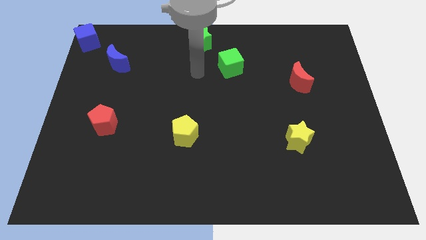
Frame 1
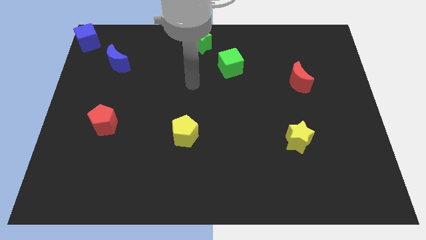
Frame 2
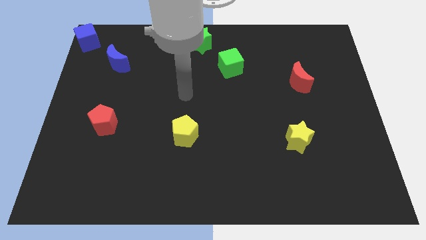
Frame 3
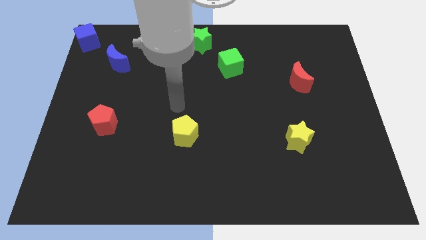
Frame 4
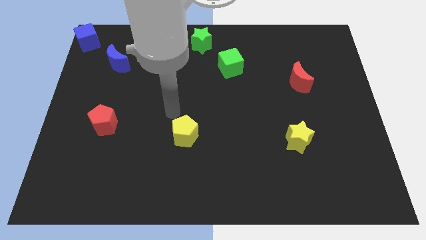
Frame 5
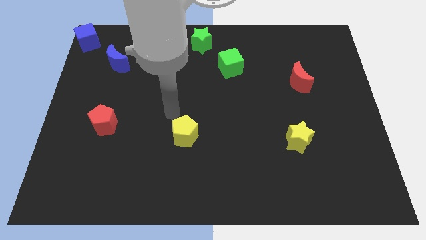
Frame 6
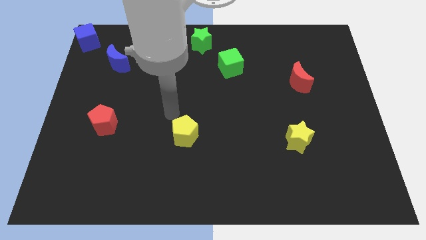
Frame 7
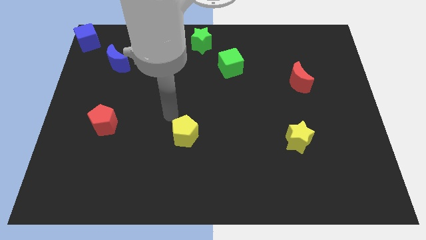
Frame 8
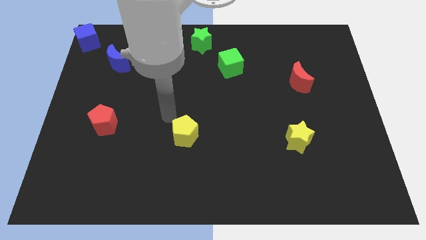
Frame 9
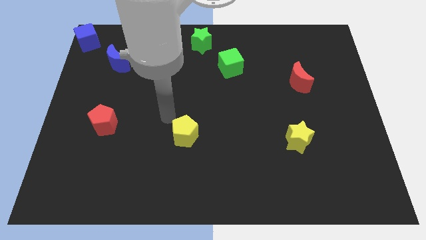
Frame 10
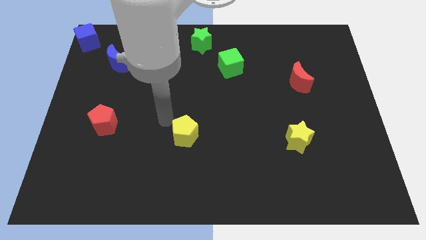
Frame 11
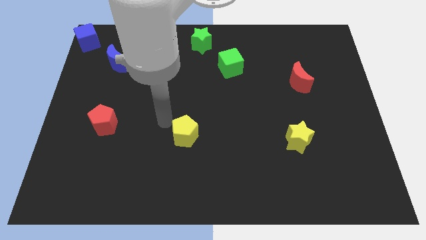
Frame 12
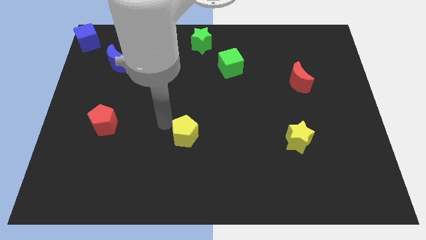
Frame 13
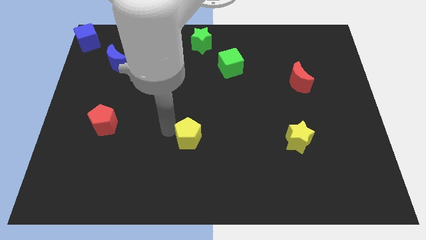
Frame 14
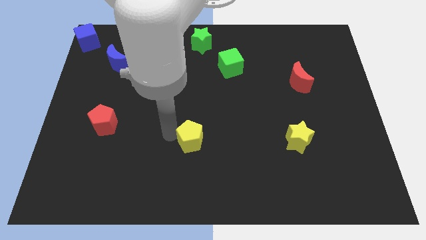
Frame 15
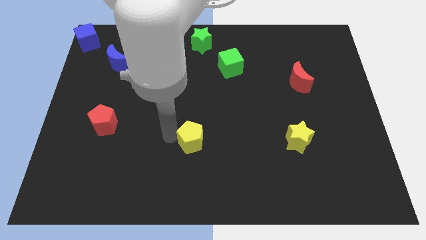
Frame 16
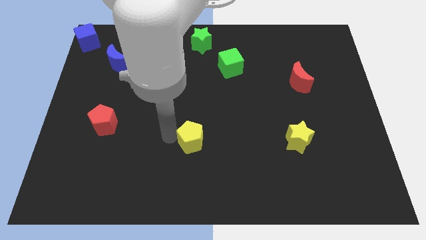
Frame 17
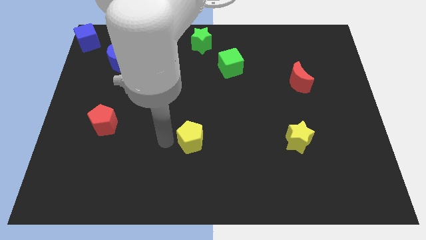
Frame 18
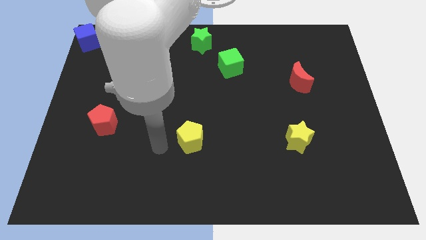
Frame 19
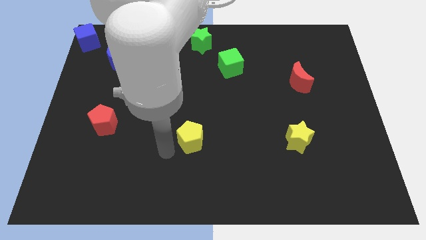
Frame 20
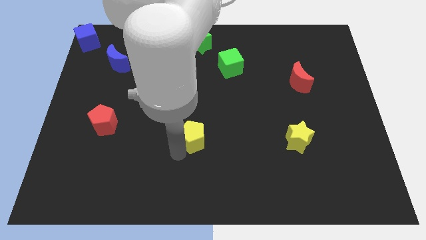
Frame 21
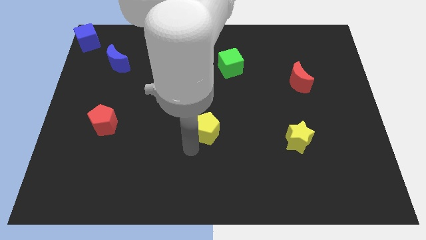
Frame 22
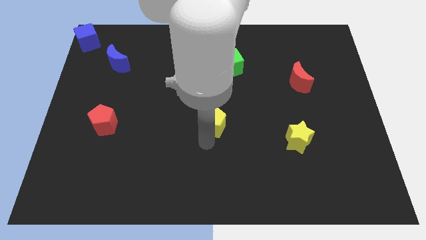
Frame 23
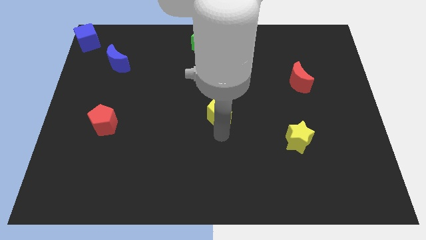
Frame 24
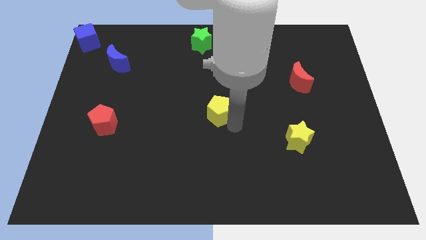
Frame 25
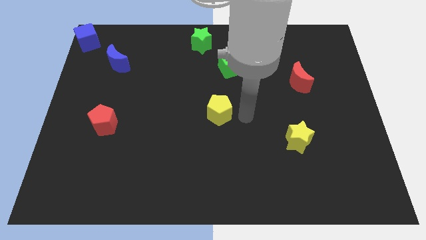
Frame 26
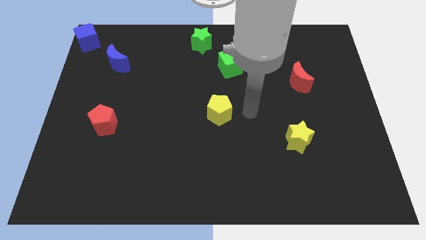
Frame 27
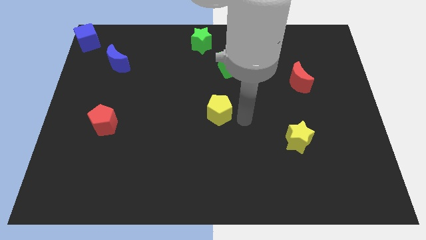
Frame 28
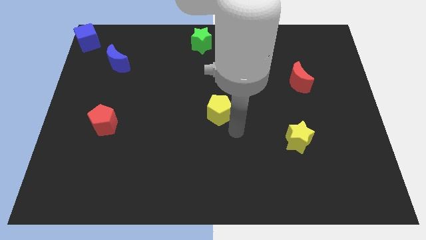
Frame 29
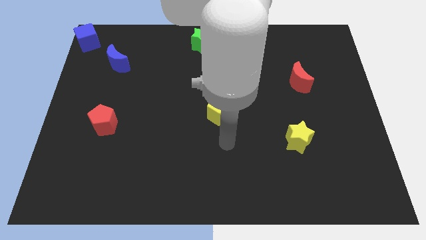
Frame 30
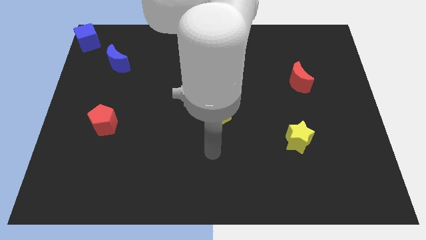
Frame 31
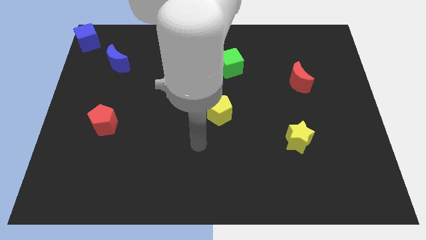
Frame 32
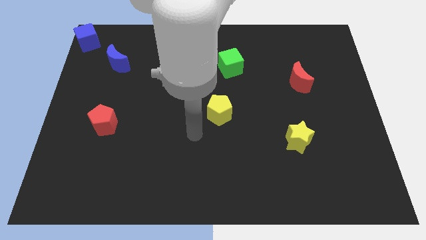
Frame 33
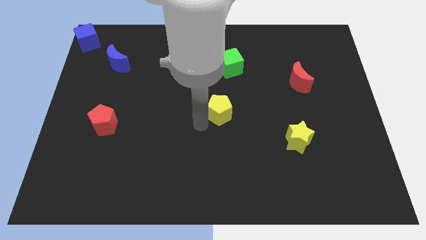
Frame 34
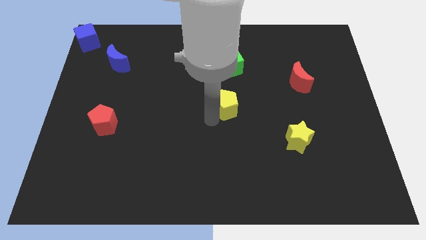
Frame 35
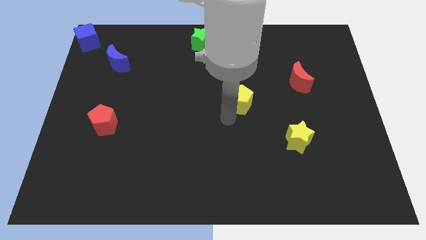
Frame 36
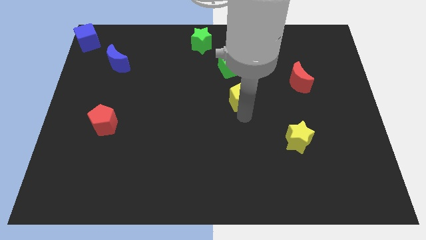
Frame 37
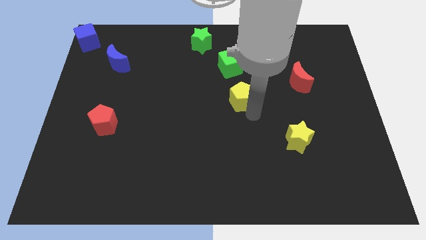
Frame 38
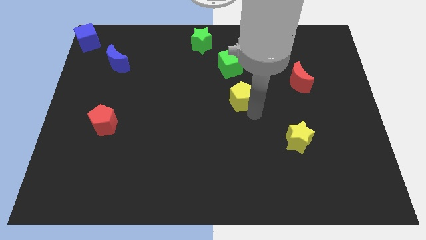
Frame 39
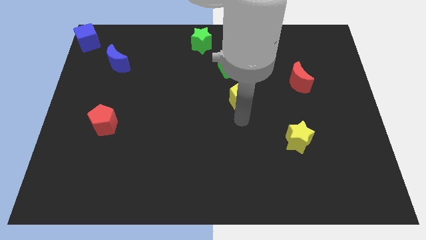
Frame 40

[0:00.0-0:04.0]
place the yellow pentagon diagonally bottom left to red moon

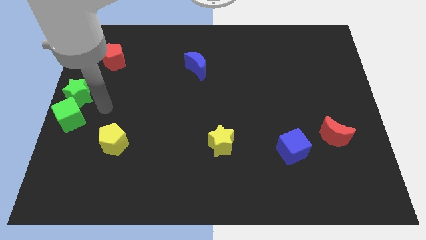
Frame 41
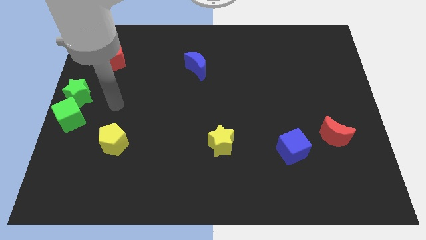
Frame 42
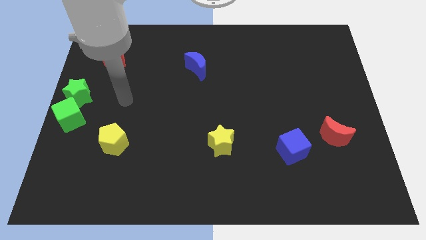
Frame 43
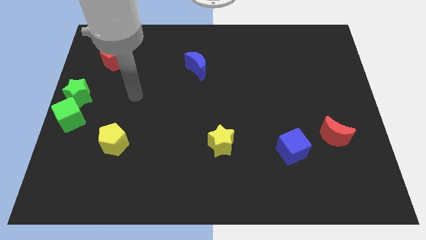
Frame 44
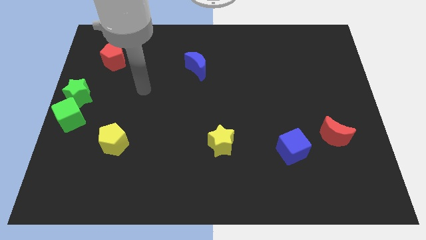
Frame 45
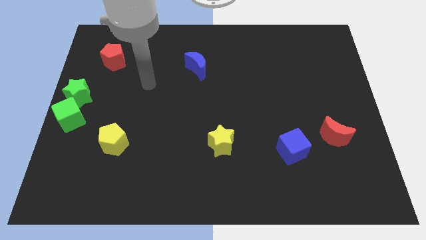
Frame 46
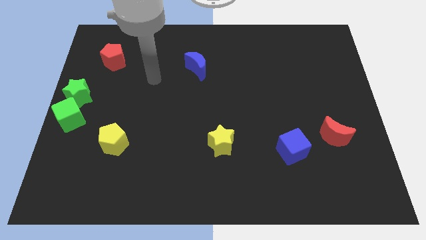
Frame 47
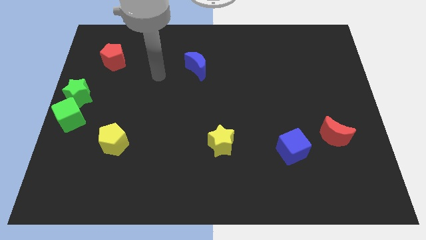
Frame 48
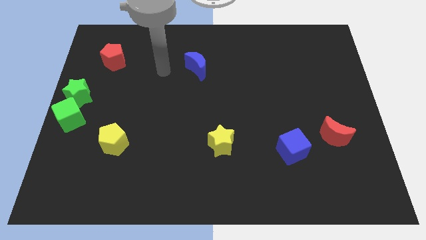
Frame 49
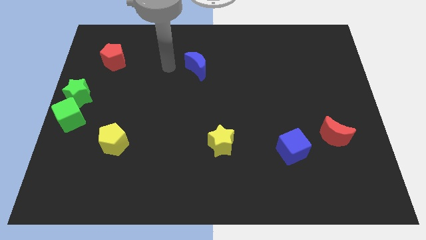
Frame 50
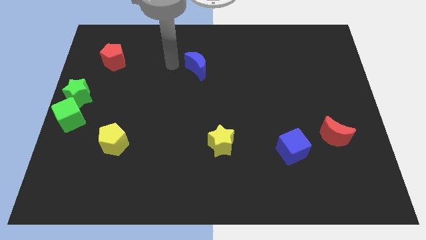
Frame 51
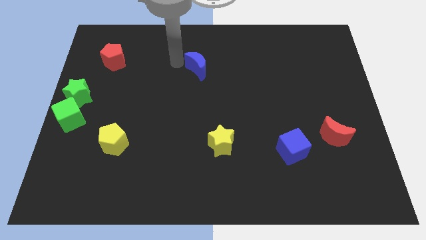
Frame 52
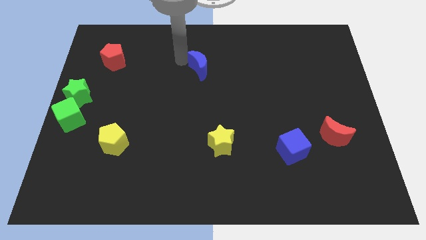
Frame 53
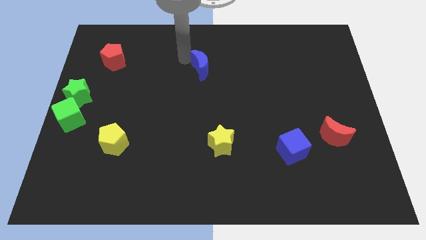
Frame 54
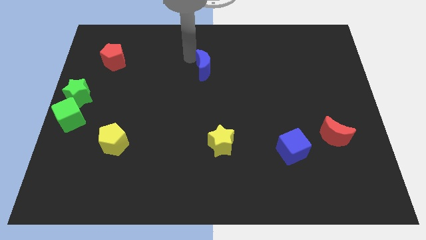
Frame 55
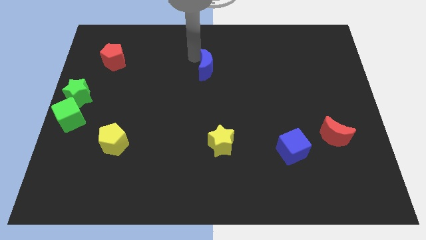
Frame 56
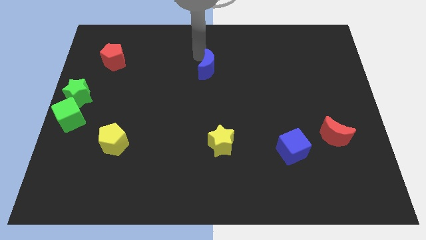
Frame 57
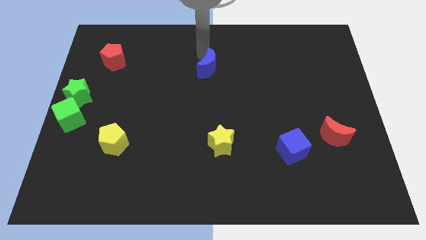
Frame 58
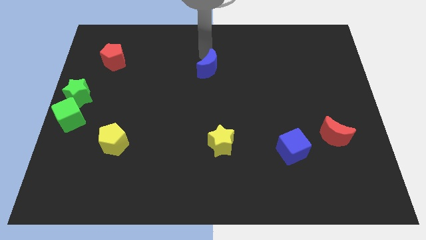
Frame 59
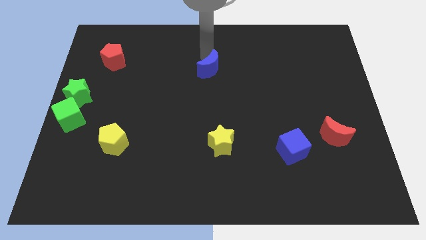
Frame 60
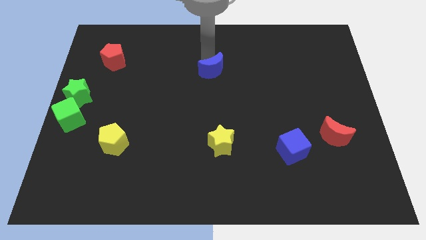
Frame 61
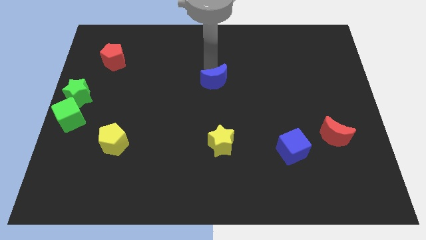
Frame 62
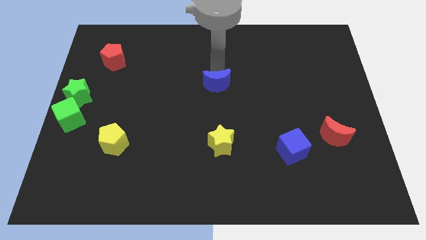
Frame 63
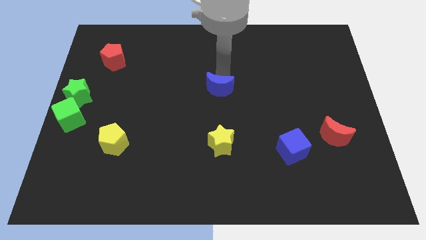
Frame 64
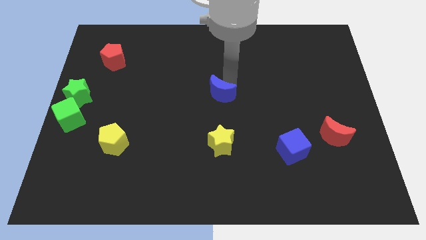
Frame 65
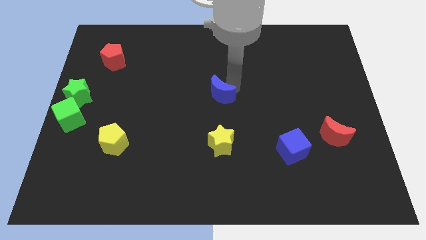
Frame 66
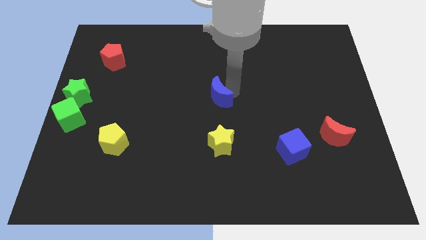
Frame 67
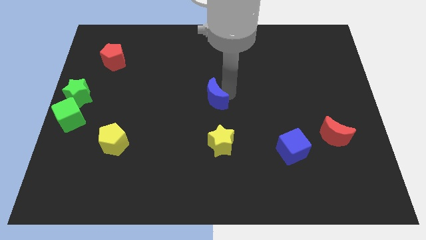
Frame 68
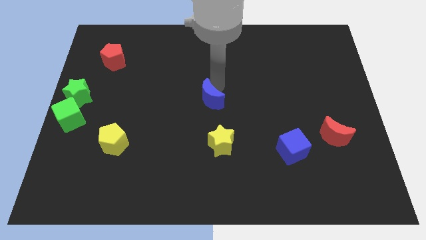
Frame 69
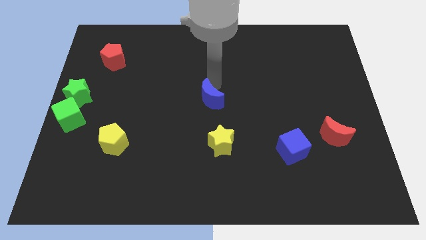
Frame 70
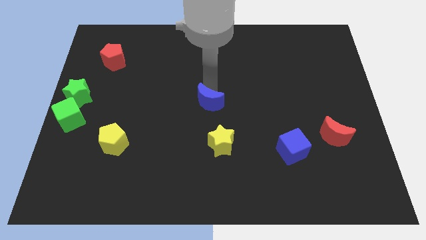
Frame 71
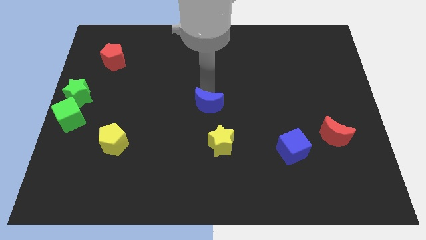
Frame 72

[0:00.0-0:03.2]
push blue crescent to the centre of the board

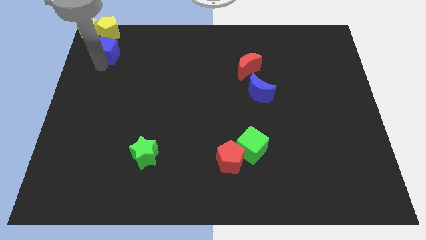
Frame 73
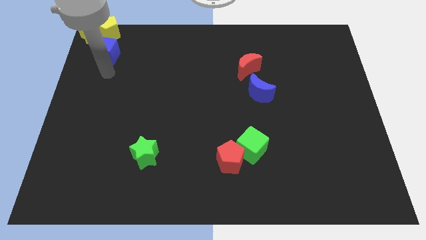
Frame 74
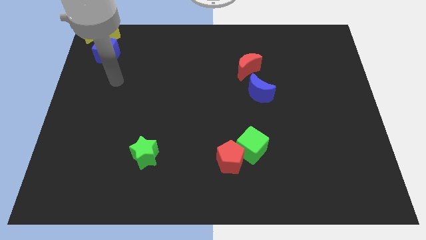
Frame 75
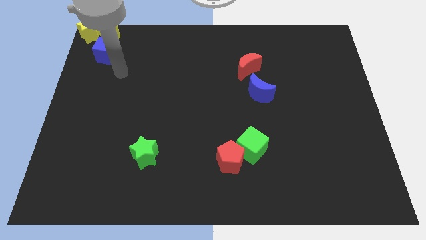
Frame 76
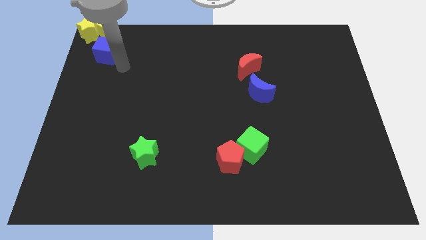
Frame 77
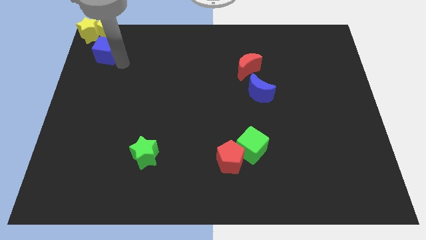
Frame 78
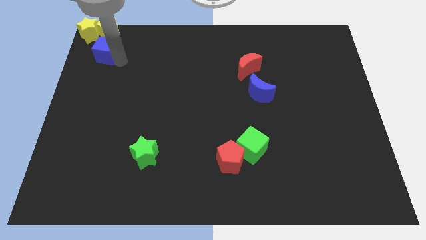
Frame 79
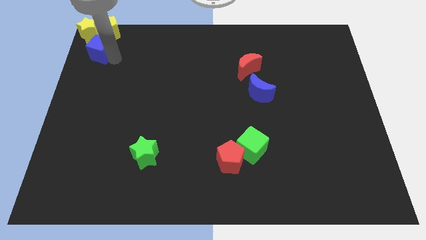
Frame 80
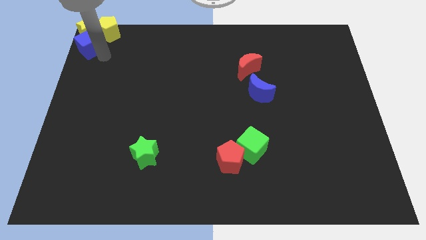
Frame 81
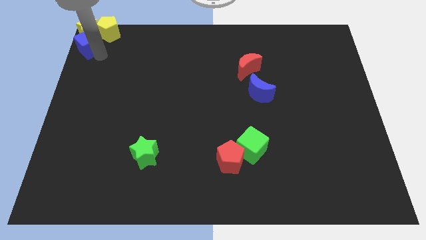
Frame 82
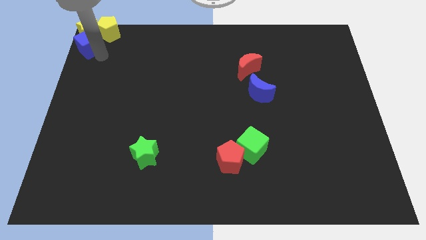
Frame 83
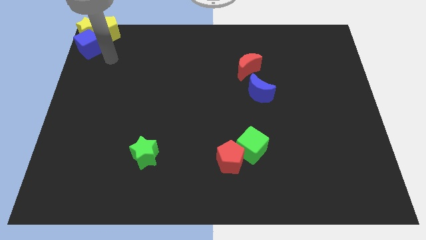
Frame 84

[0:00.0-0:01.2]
place blue cube below the yellow star

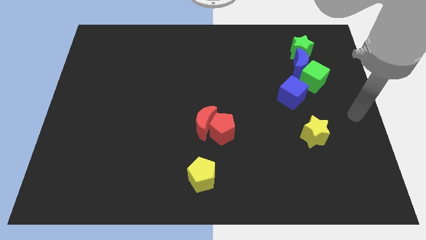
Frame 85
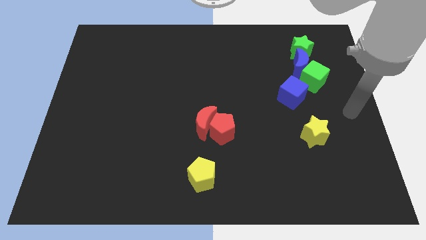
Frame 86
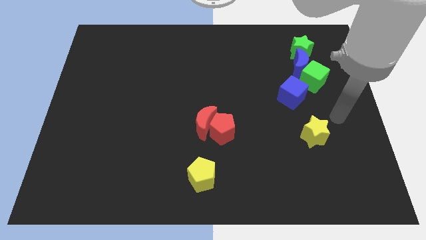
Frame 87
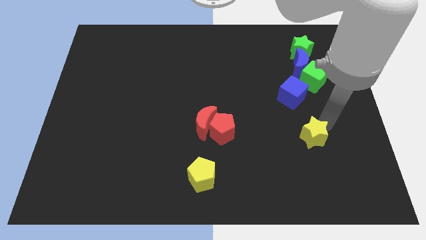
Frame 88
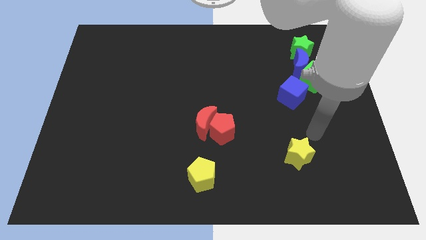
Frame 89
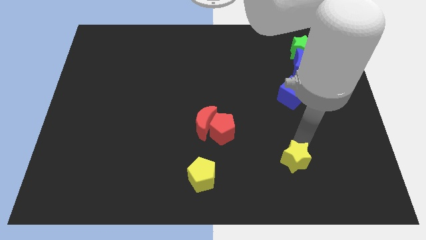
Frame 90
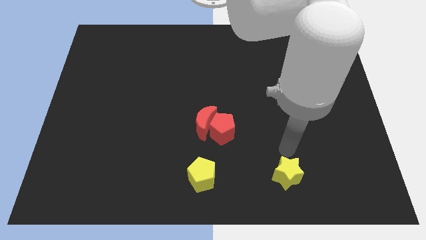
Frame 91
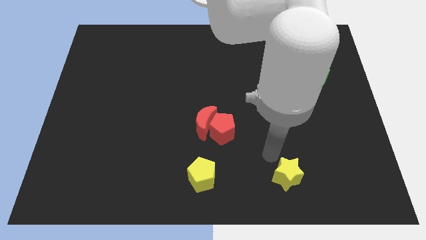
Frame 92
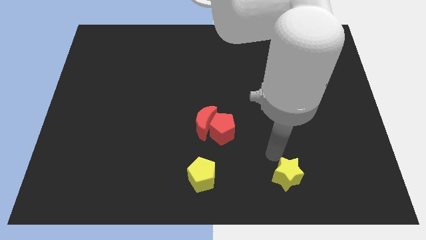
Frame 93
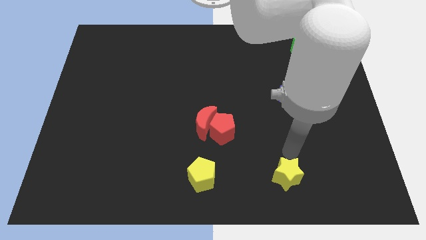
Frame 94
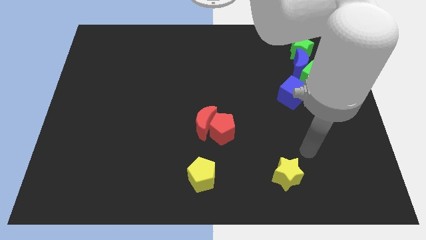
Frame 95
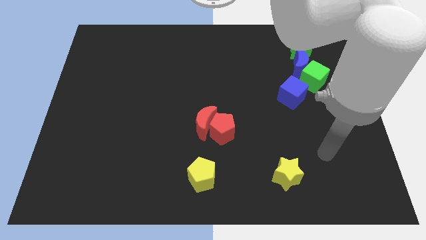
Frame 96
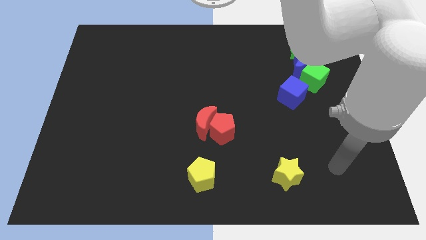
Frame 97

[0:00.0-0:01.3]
move the yellow star towards the yellow pentagon
